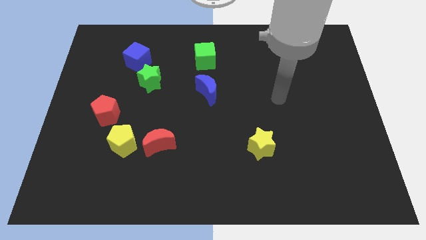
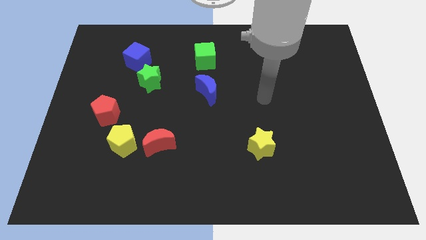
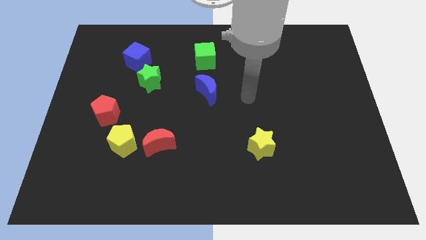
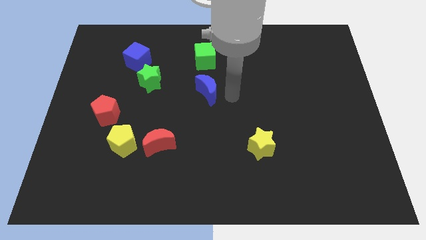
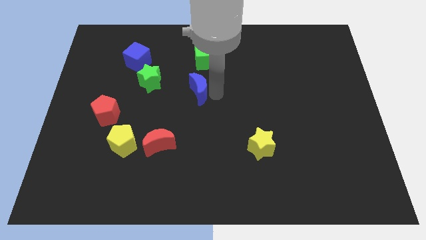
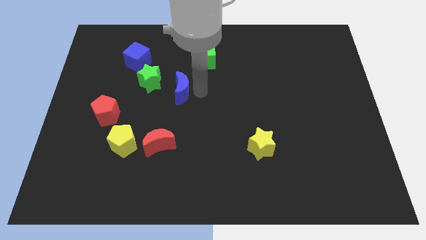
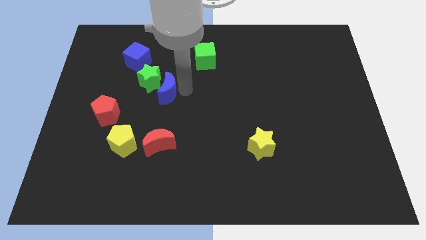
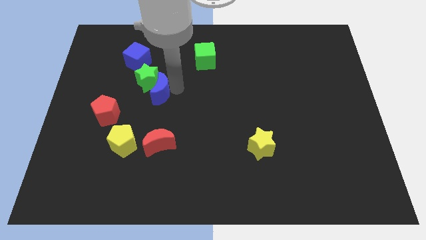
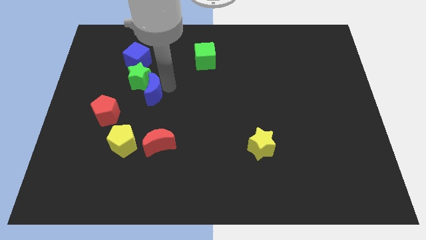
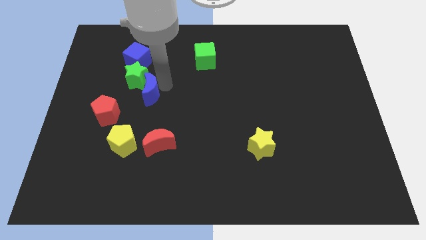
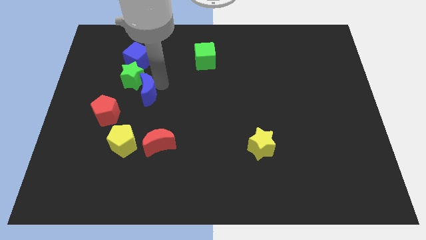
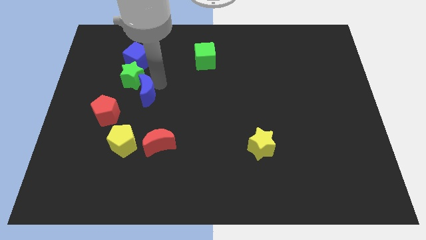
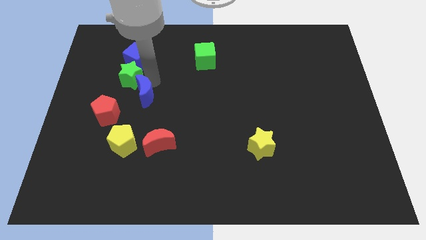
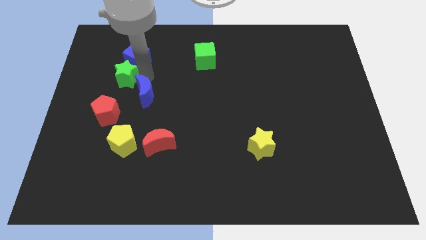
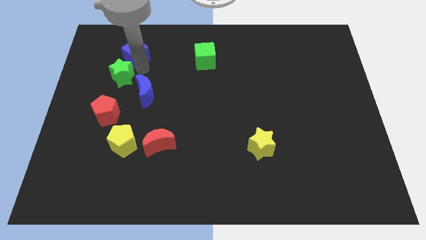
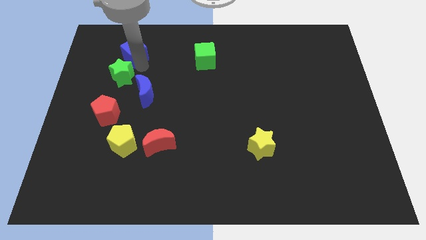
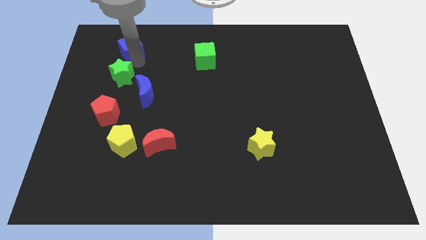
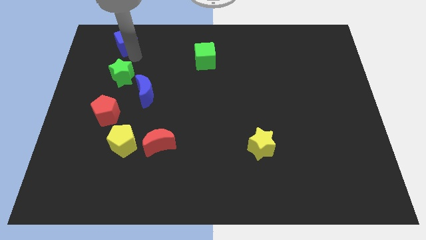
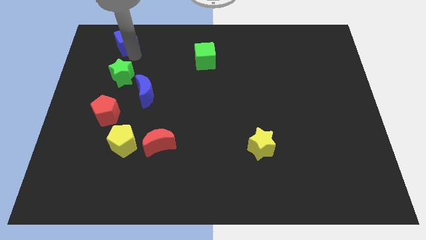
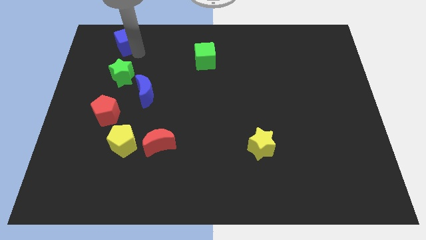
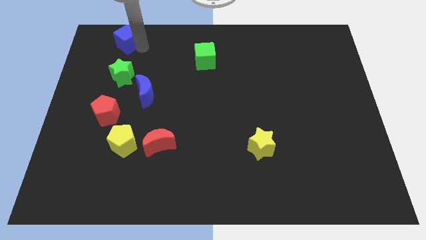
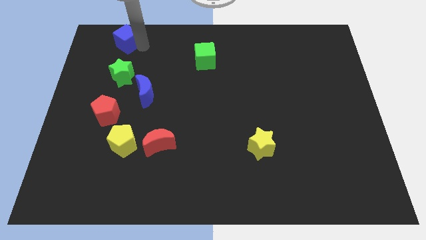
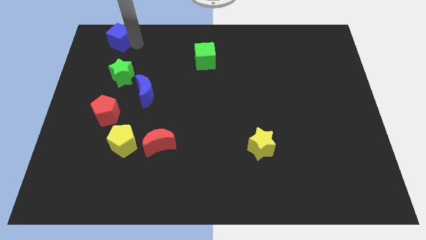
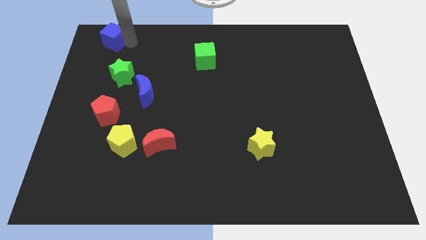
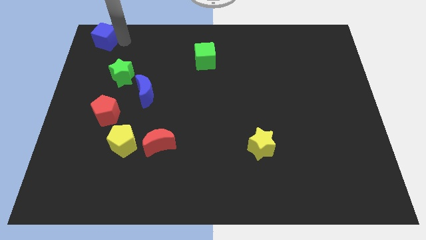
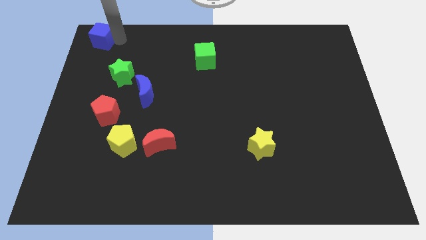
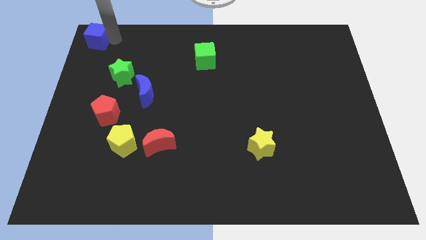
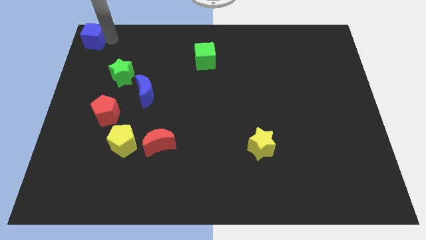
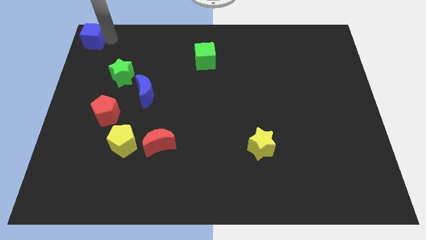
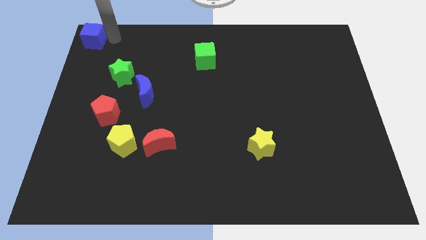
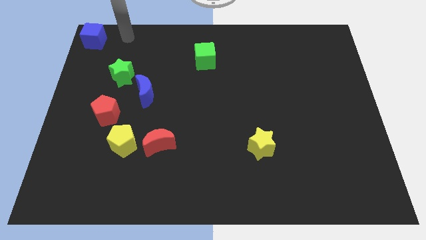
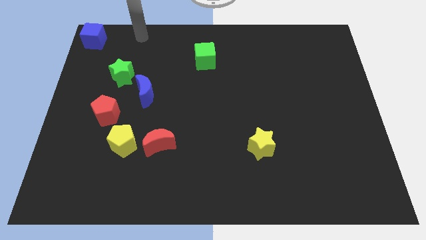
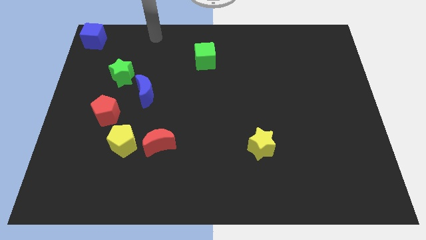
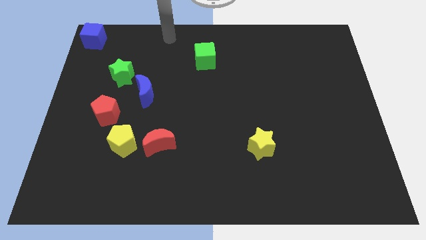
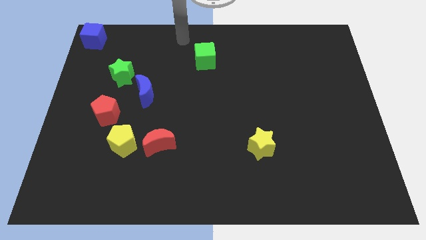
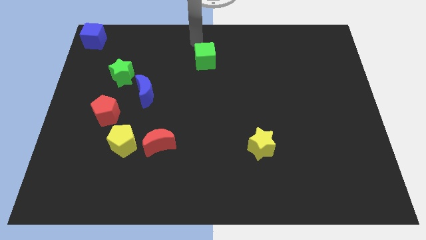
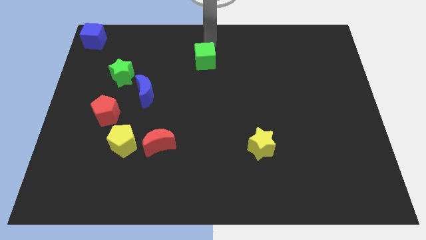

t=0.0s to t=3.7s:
move the blue cube to the top left

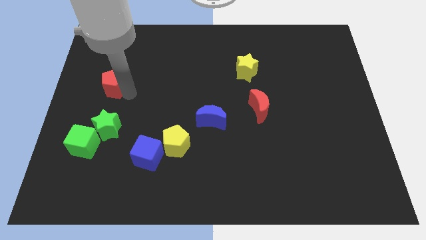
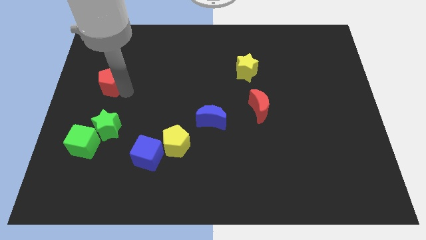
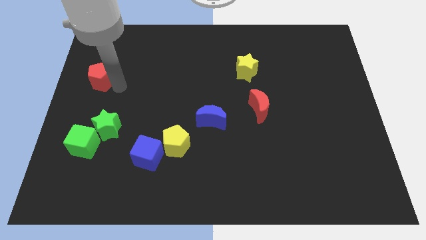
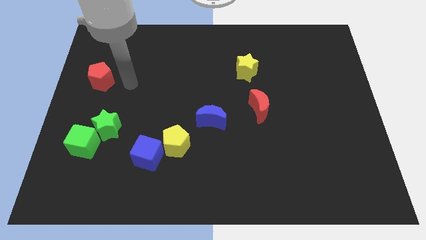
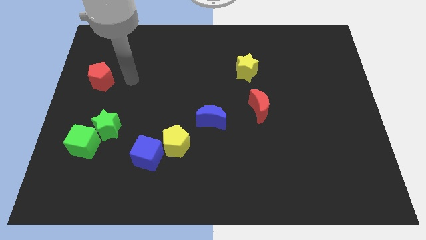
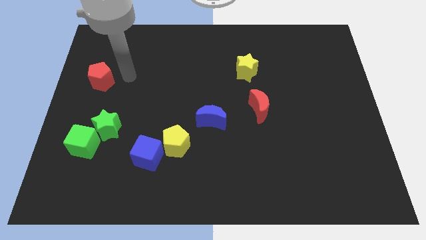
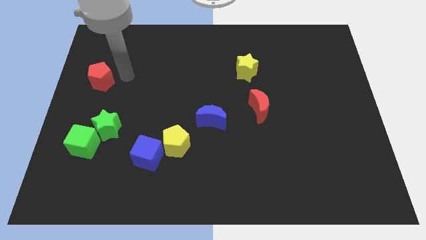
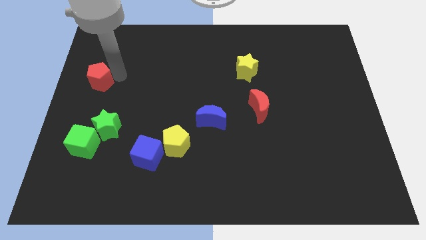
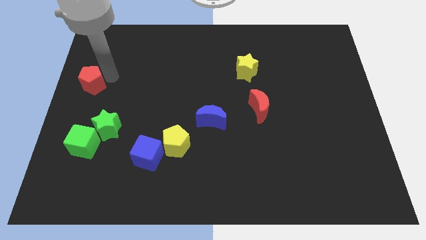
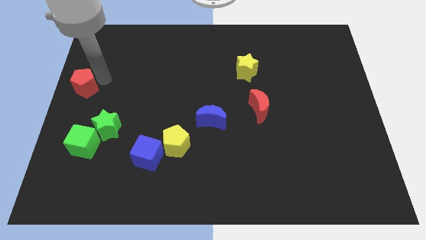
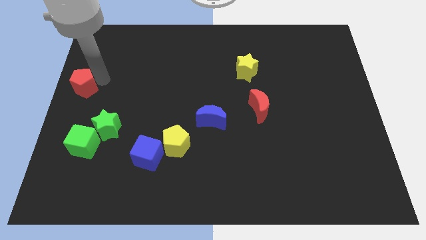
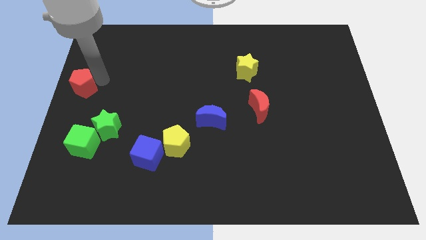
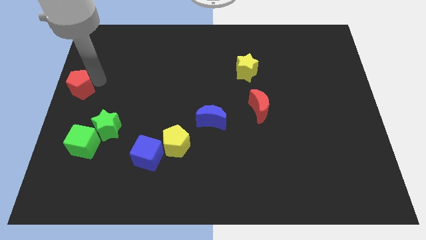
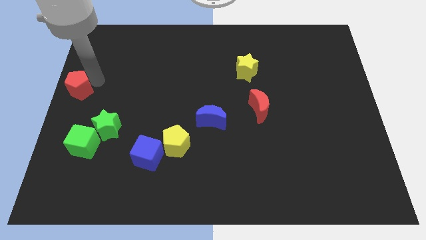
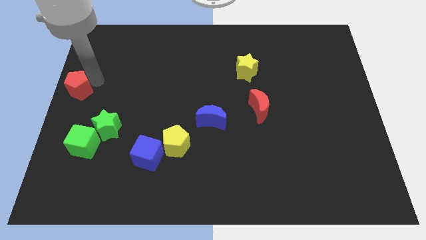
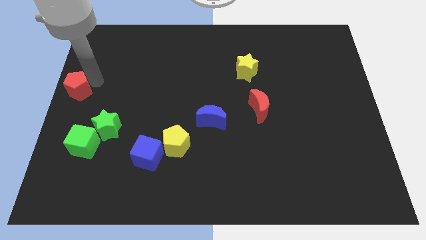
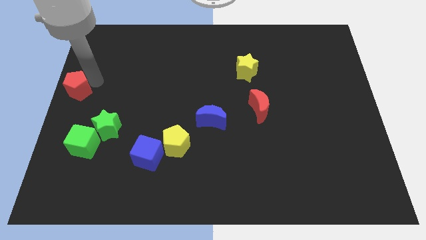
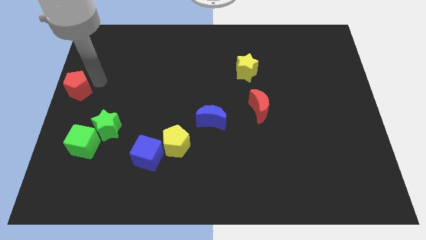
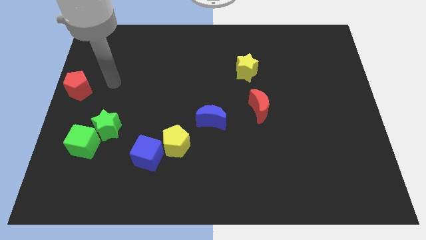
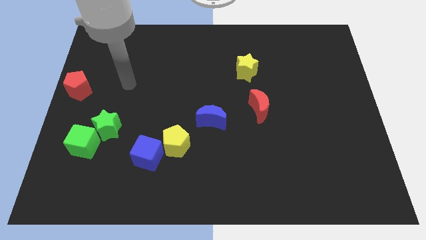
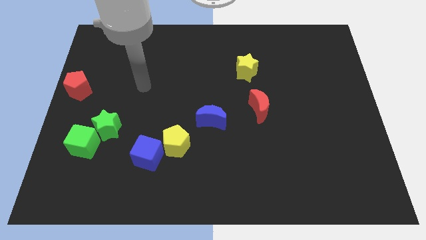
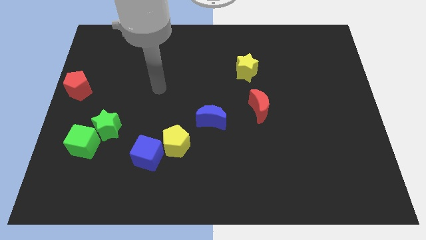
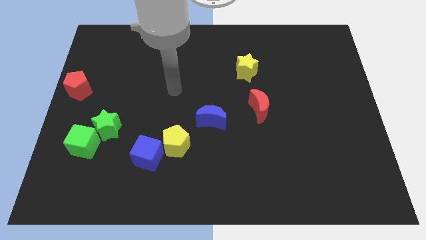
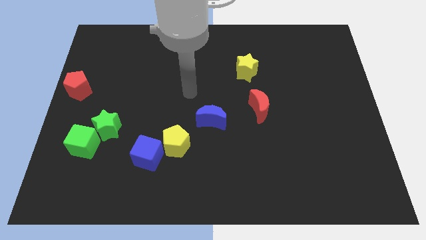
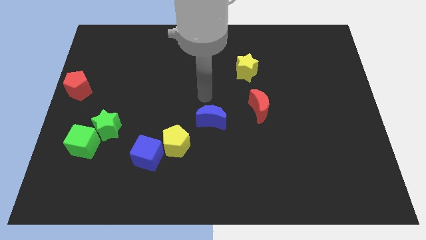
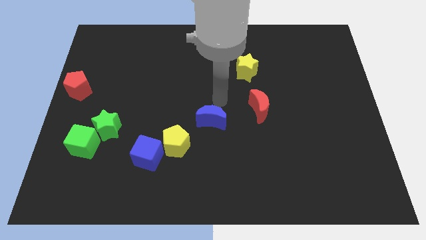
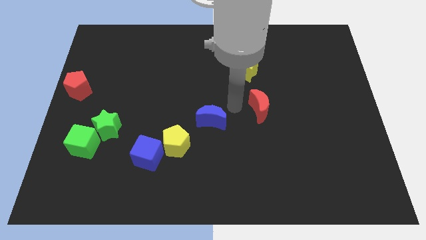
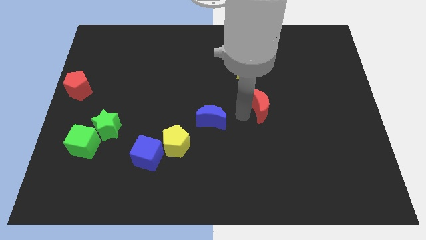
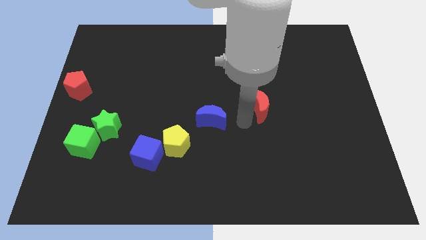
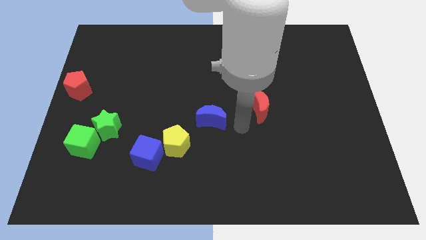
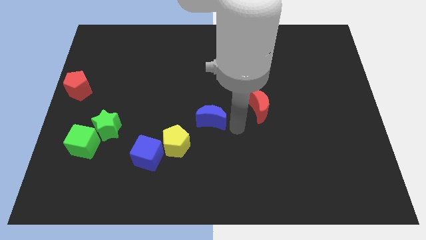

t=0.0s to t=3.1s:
place the red pentagon at the center left of the board

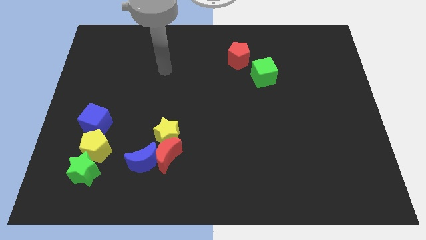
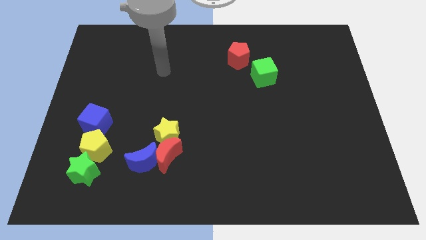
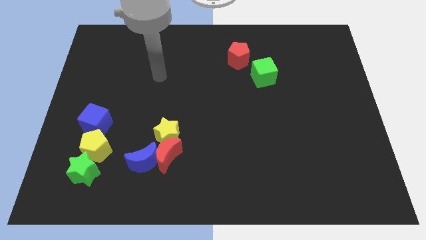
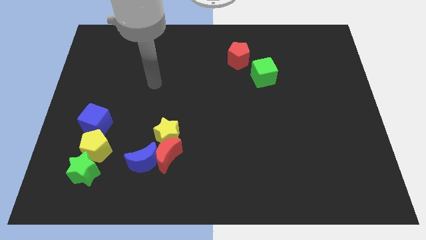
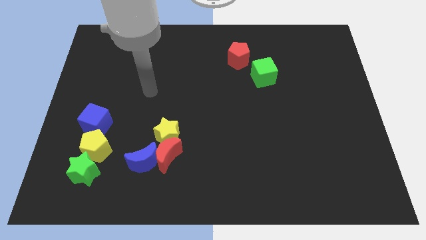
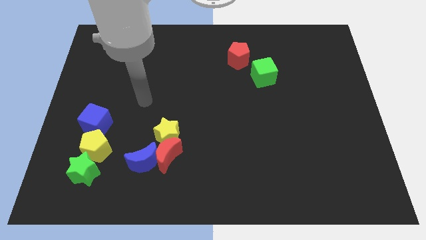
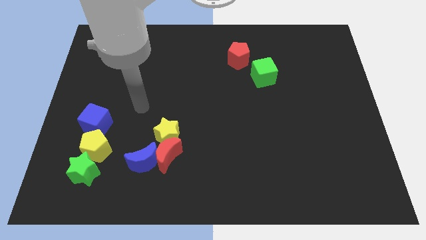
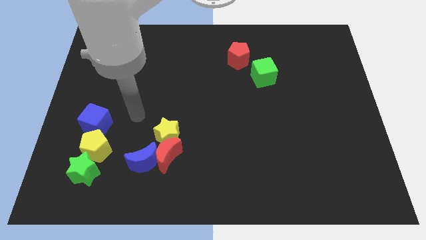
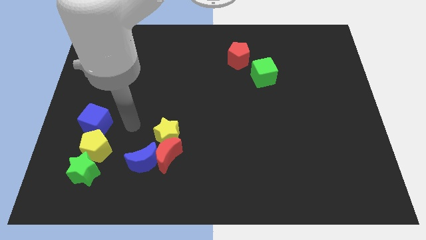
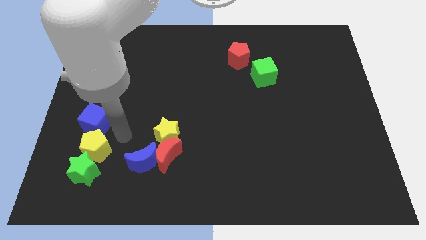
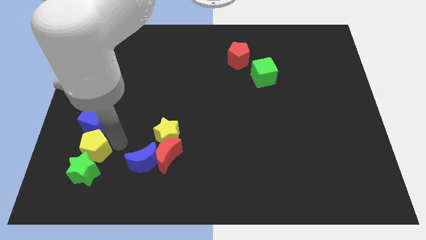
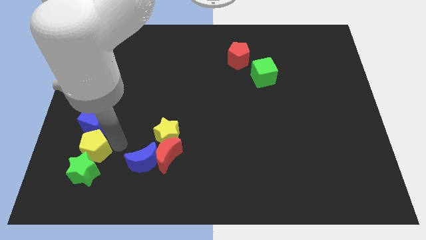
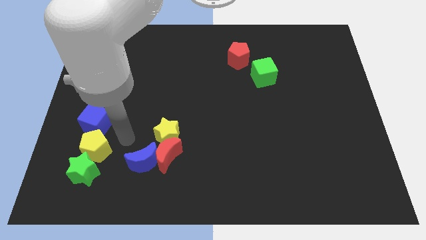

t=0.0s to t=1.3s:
point your arm close to yellow pentagon

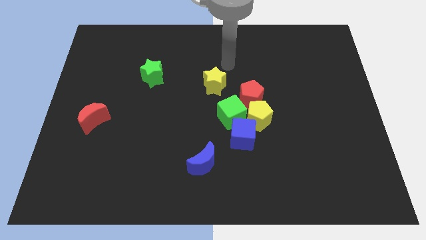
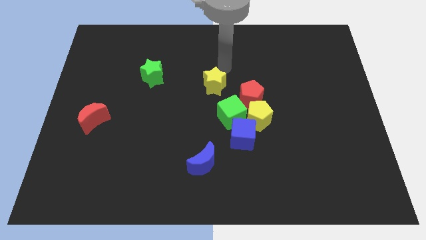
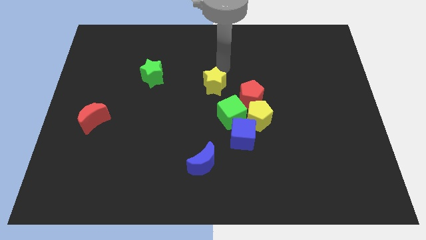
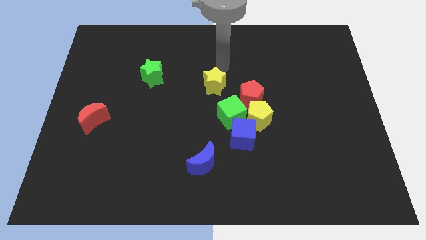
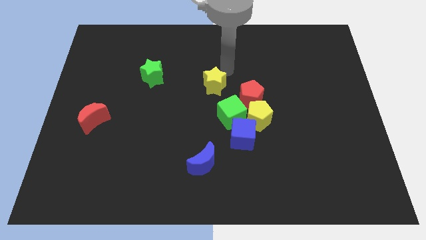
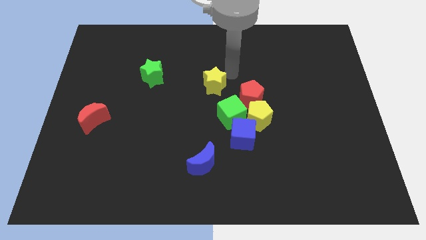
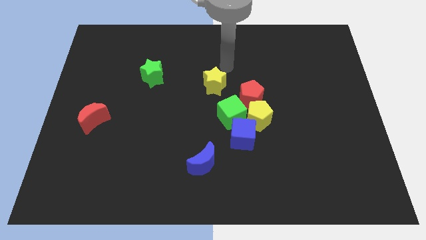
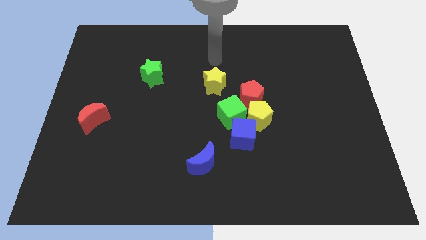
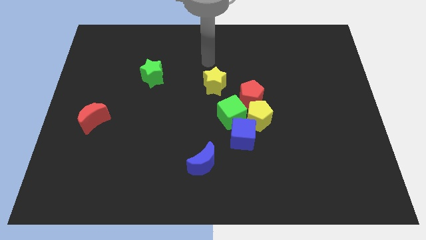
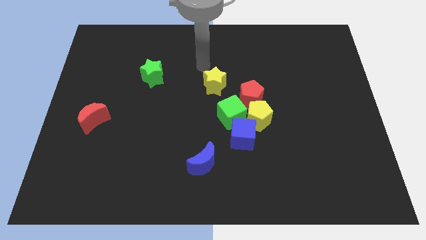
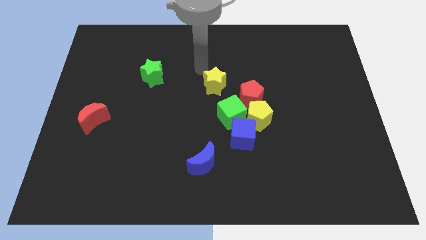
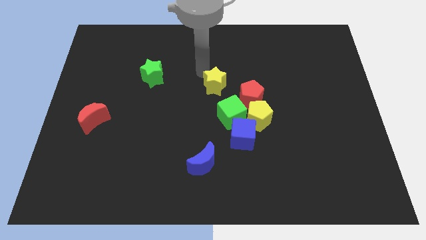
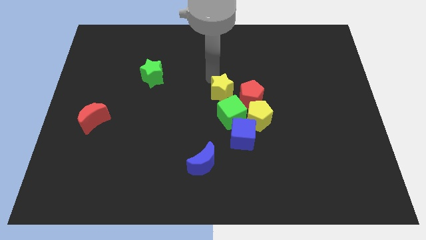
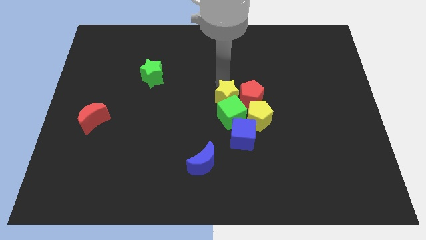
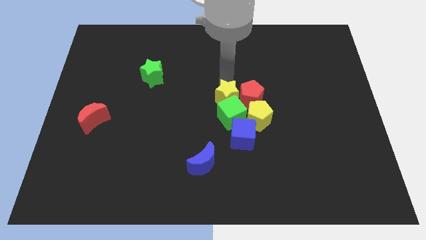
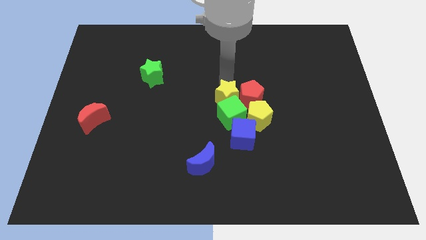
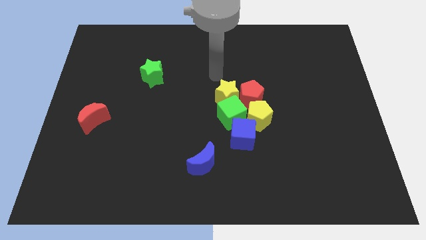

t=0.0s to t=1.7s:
move the yellow star into the top of green cube
